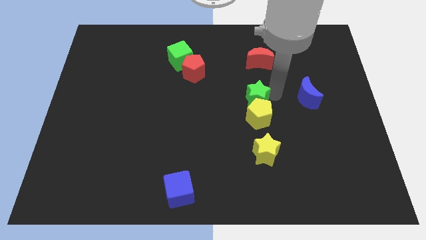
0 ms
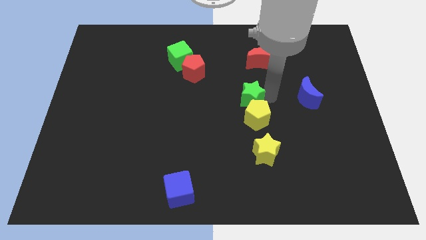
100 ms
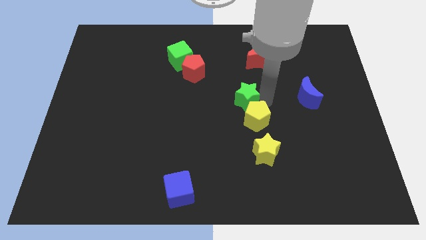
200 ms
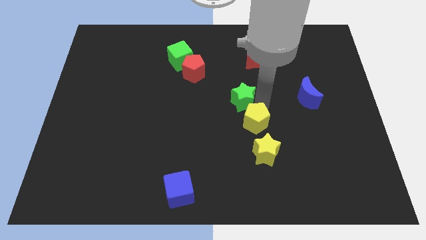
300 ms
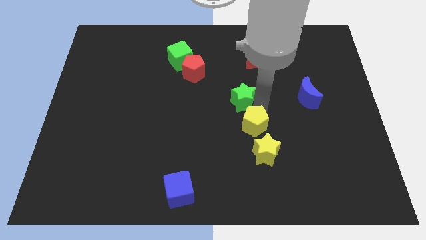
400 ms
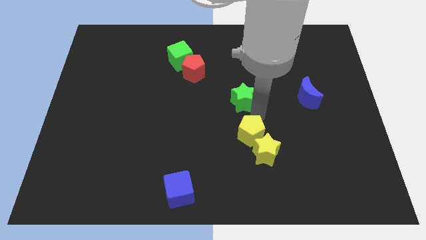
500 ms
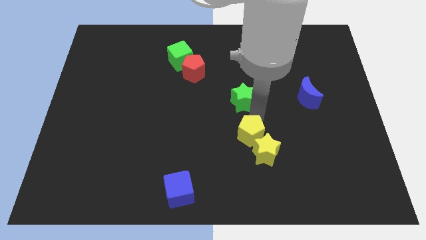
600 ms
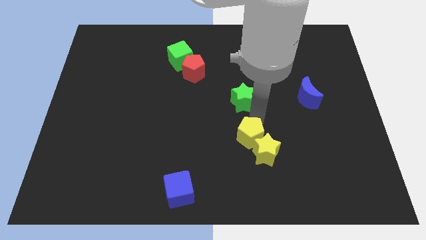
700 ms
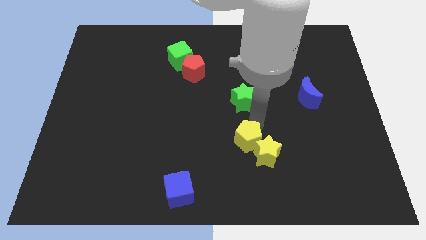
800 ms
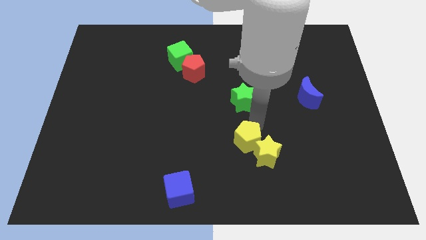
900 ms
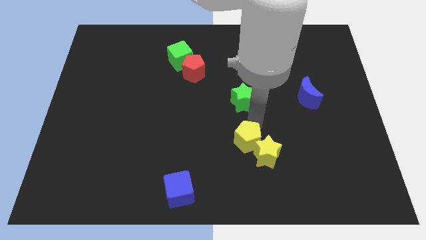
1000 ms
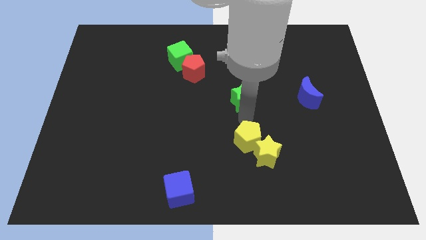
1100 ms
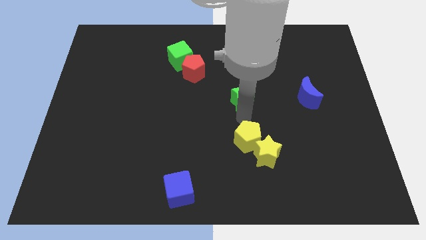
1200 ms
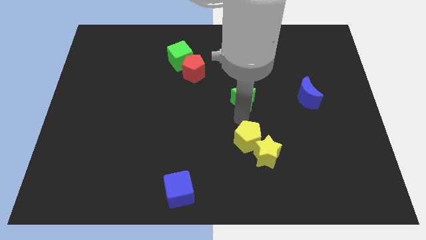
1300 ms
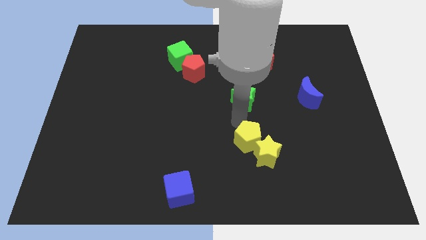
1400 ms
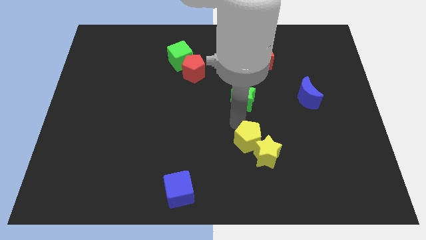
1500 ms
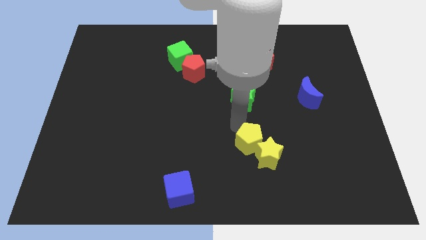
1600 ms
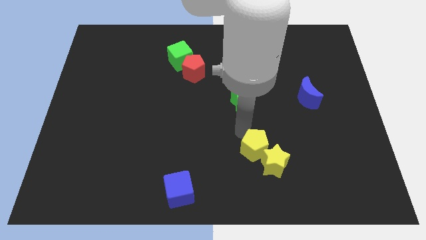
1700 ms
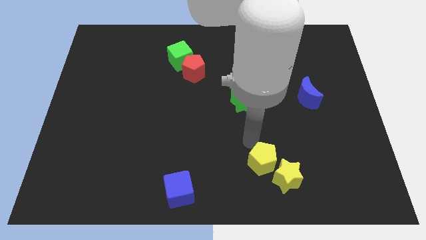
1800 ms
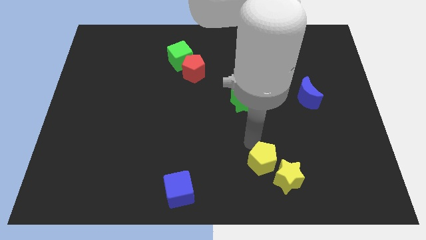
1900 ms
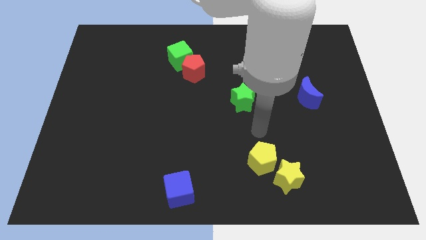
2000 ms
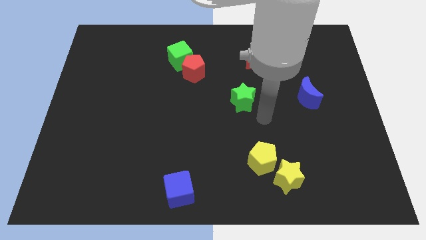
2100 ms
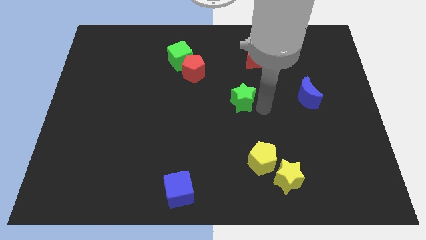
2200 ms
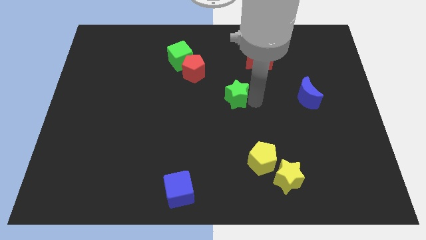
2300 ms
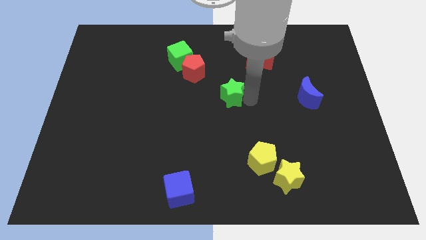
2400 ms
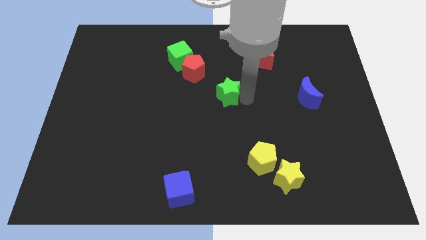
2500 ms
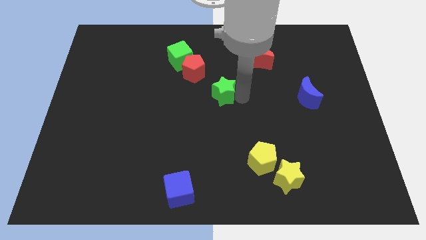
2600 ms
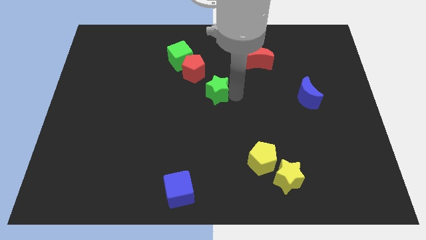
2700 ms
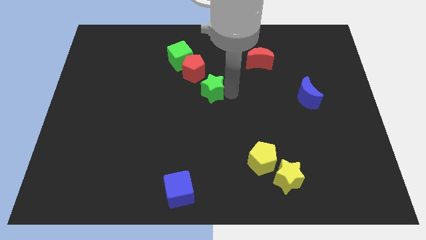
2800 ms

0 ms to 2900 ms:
separate the green star and yellow pentagon

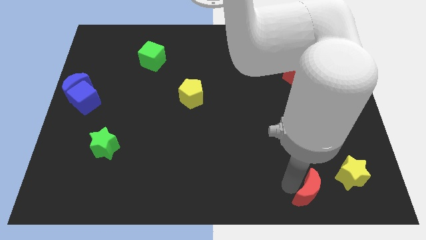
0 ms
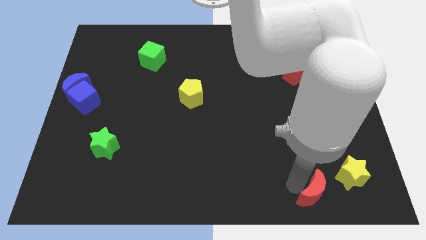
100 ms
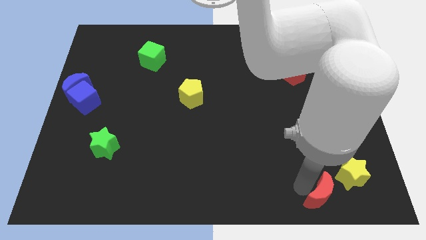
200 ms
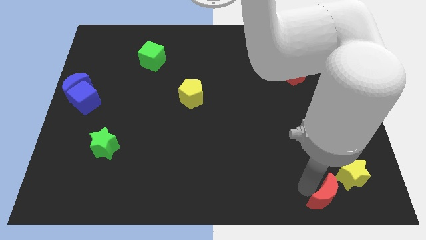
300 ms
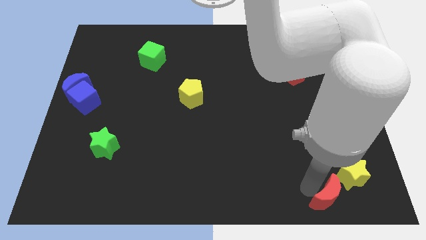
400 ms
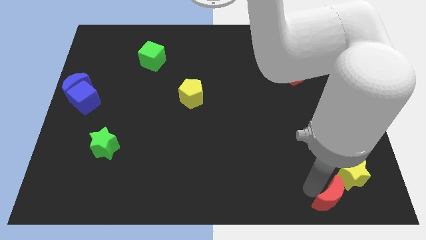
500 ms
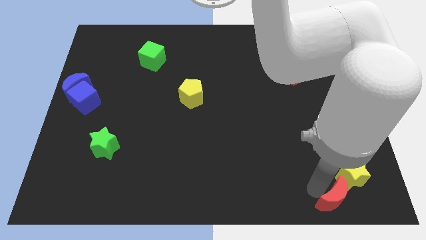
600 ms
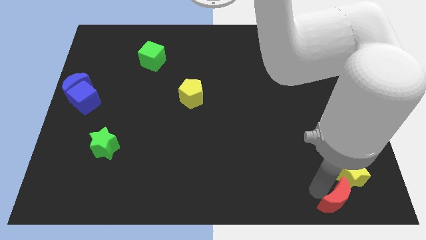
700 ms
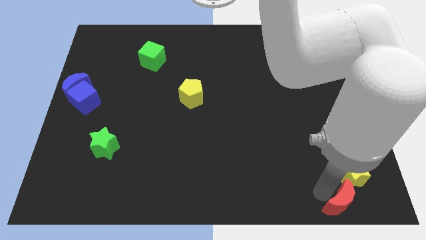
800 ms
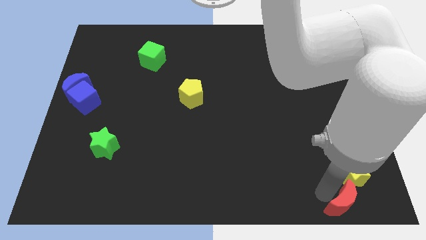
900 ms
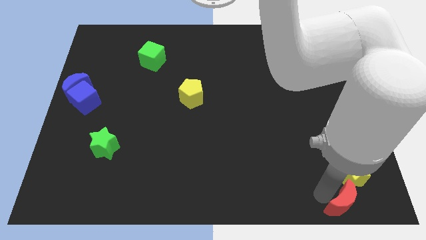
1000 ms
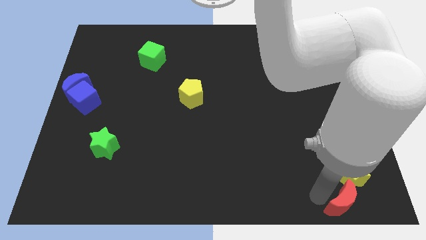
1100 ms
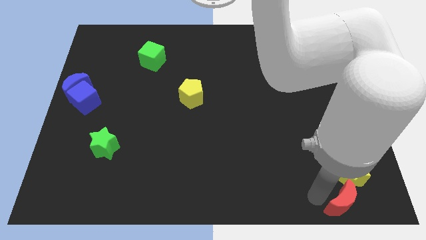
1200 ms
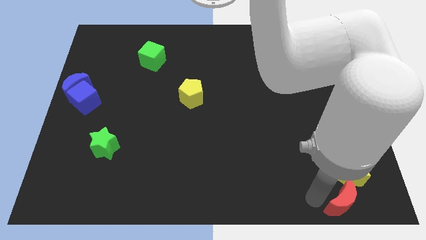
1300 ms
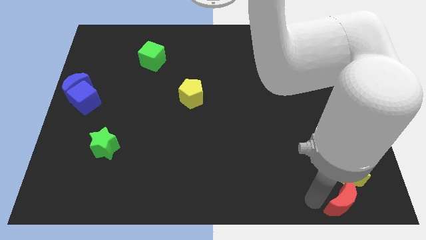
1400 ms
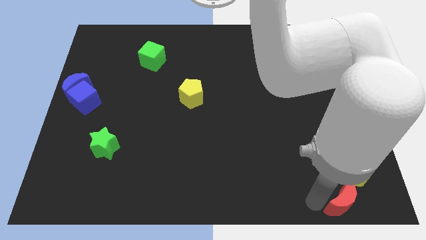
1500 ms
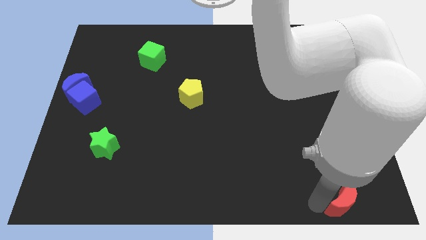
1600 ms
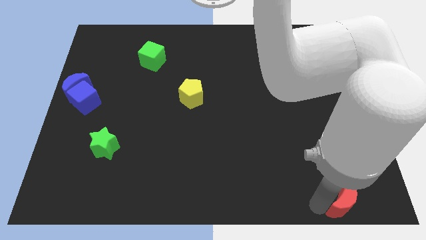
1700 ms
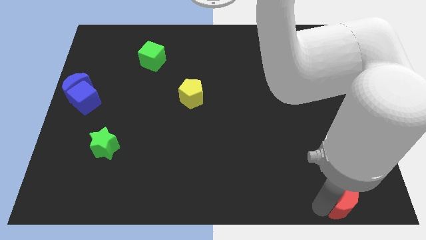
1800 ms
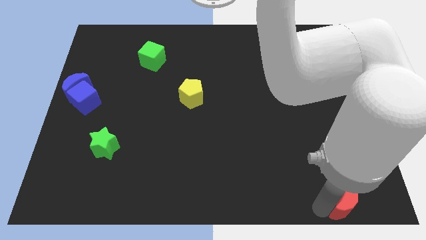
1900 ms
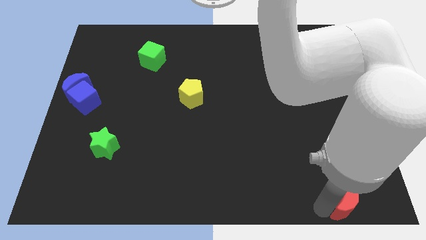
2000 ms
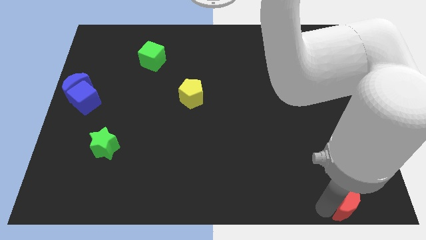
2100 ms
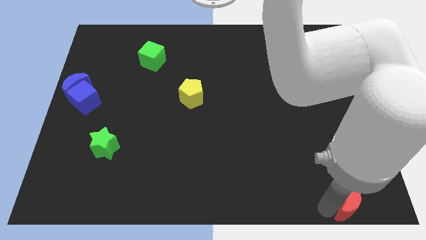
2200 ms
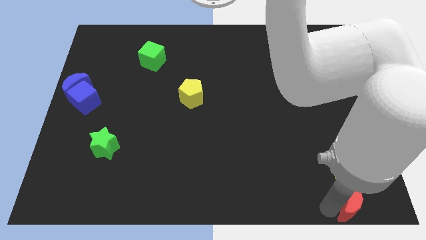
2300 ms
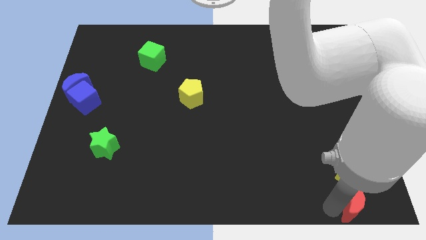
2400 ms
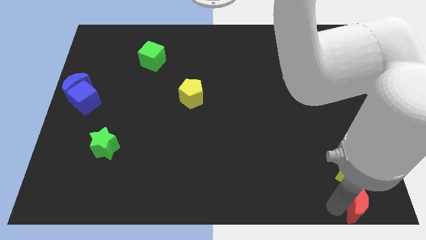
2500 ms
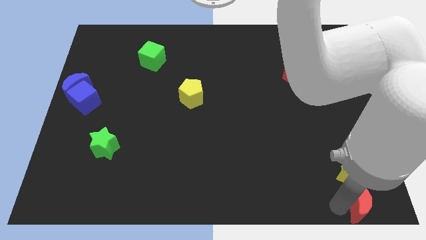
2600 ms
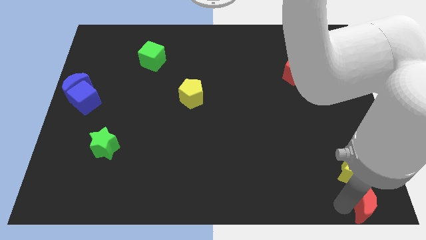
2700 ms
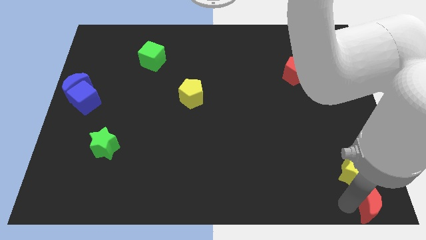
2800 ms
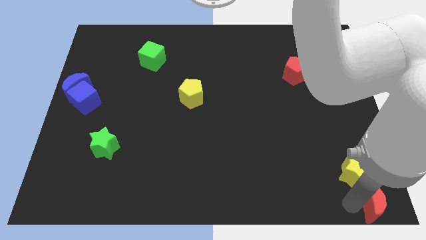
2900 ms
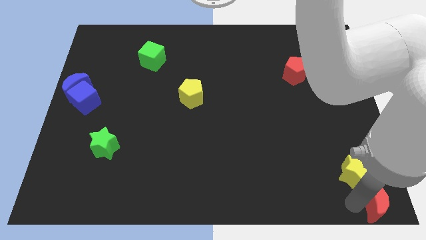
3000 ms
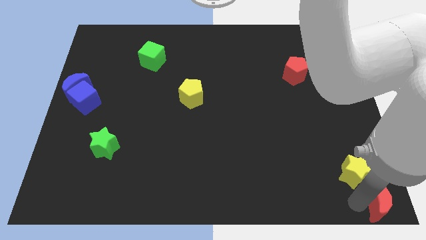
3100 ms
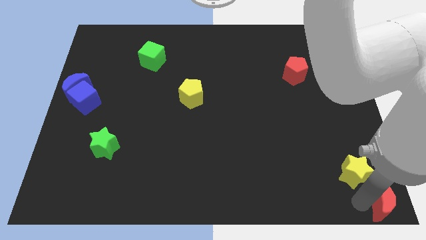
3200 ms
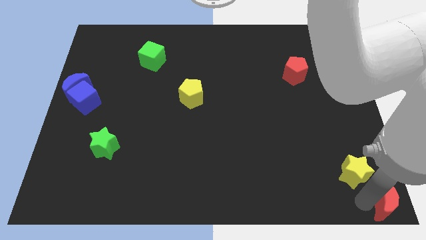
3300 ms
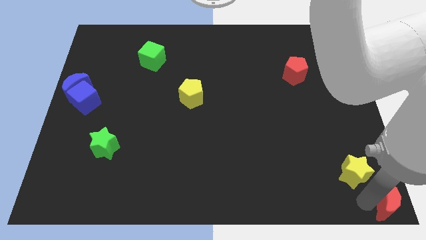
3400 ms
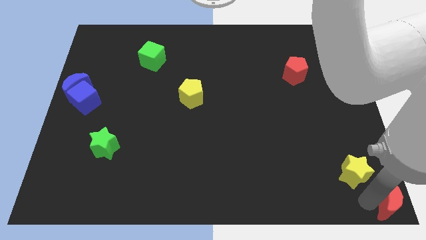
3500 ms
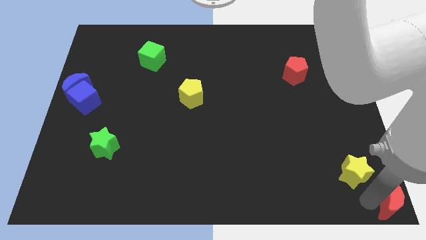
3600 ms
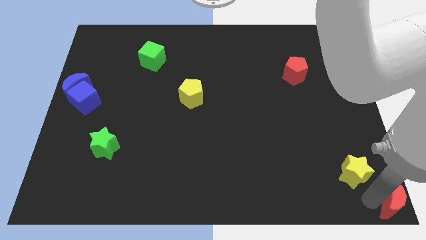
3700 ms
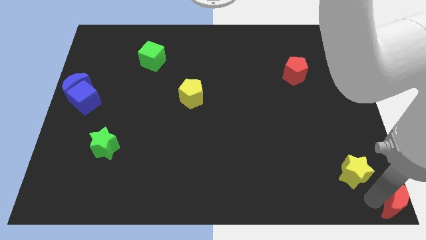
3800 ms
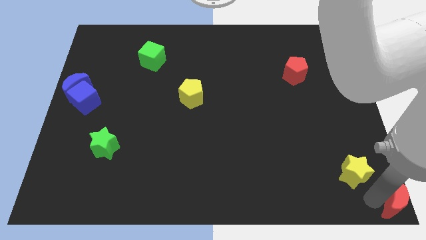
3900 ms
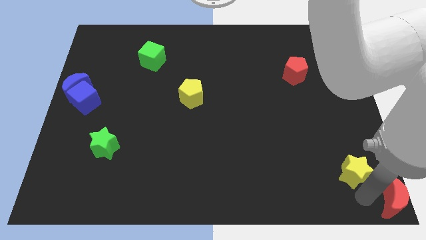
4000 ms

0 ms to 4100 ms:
place the red moon diagonally bottom right to the yellow star

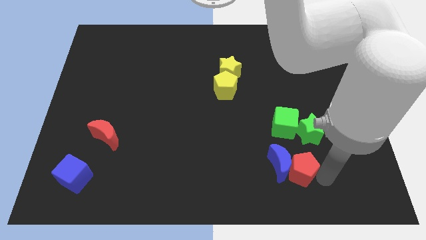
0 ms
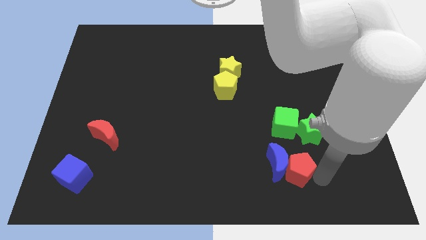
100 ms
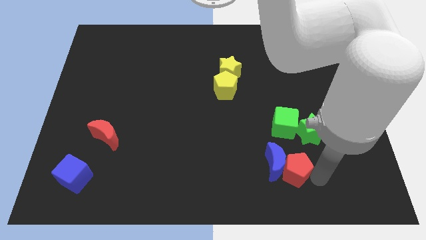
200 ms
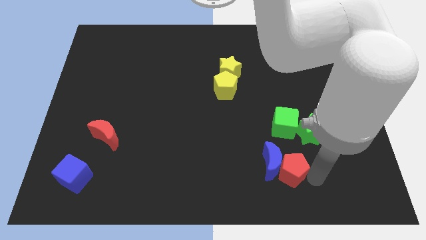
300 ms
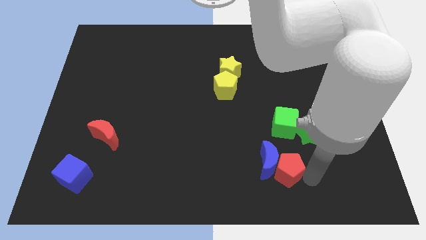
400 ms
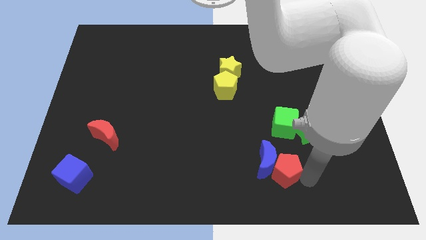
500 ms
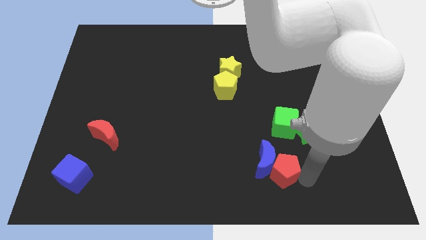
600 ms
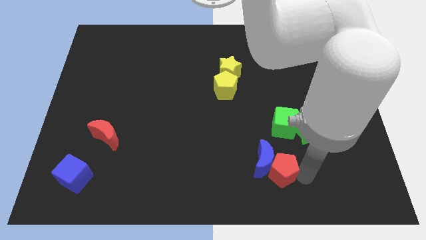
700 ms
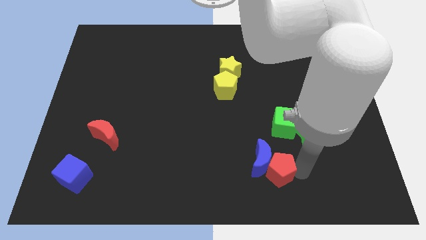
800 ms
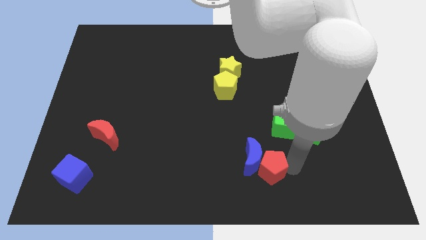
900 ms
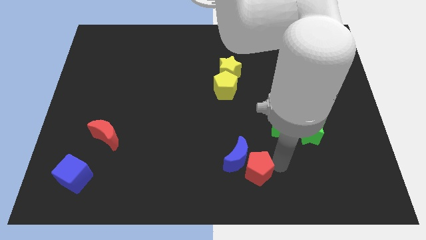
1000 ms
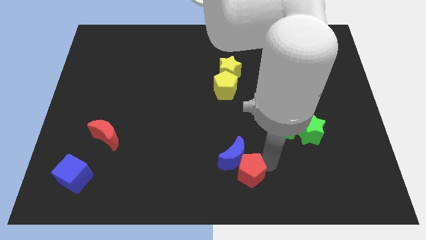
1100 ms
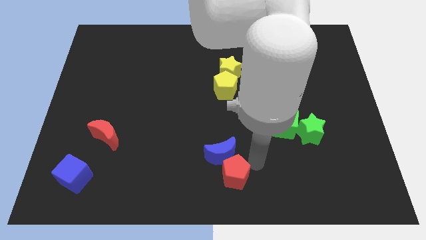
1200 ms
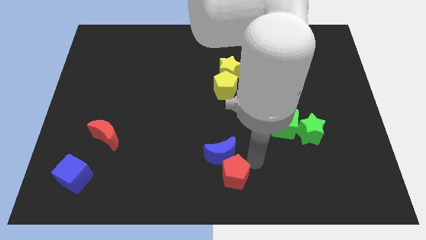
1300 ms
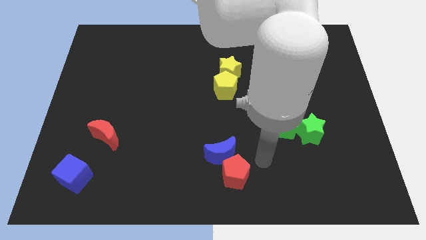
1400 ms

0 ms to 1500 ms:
drag the red pentagon along with the blue moon towards the bottom center

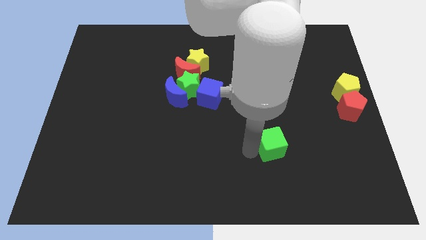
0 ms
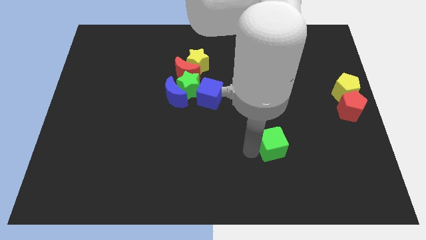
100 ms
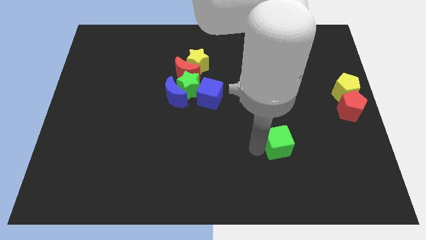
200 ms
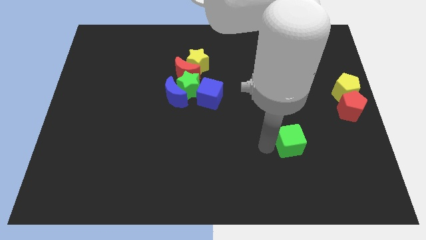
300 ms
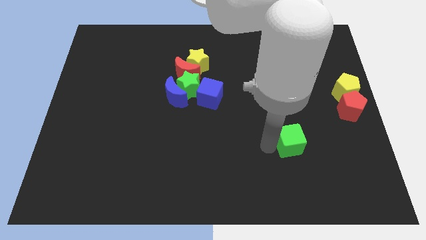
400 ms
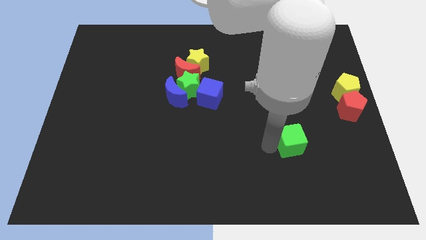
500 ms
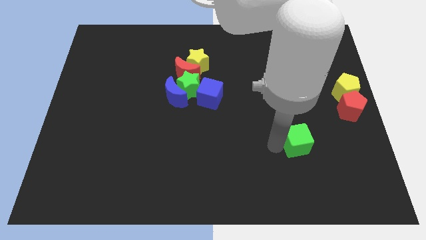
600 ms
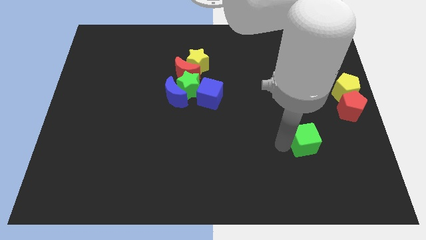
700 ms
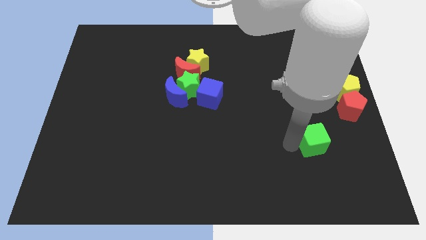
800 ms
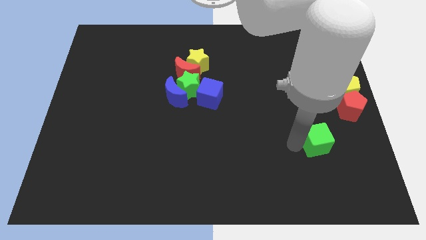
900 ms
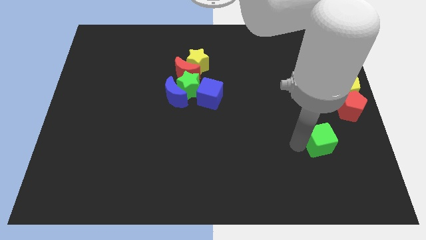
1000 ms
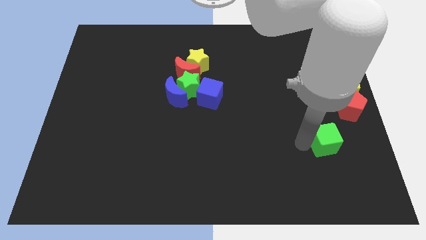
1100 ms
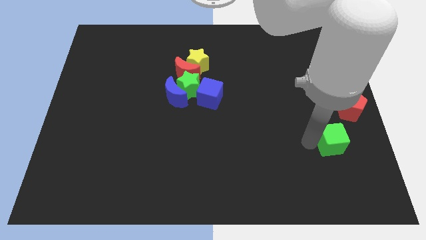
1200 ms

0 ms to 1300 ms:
slightly push the green cube to the right
